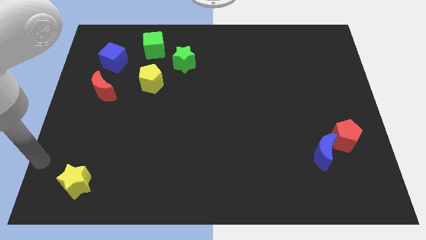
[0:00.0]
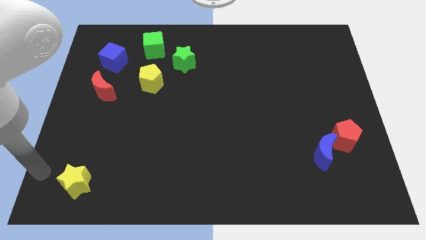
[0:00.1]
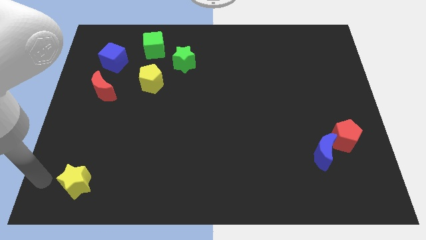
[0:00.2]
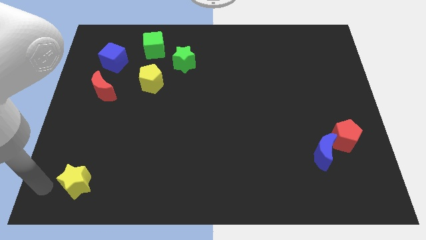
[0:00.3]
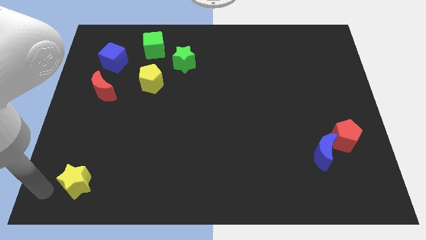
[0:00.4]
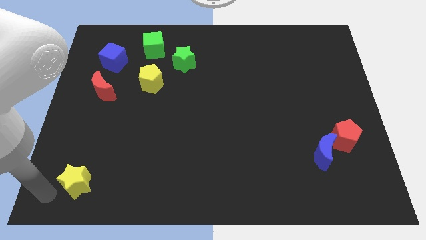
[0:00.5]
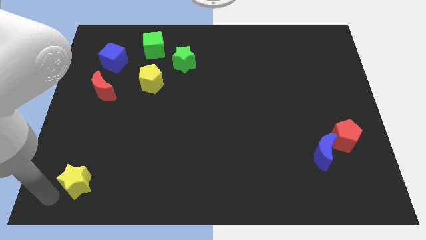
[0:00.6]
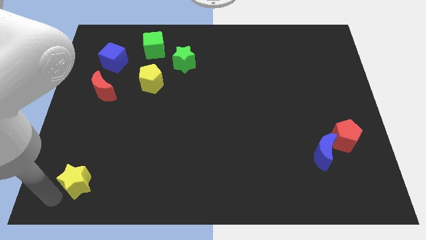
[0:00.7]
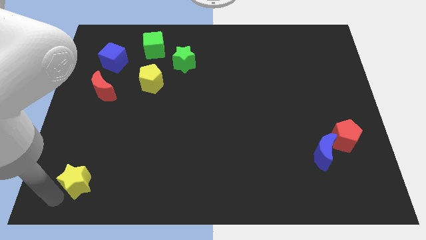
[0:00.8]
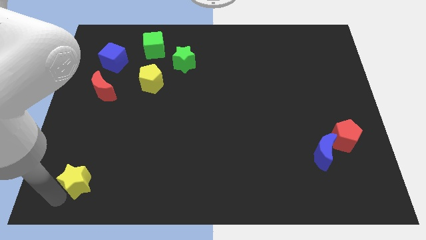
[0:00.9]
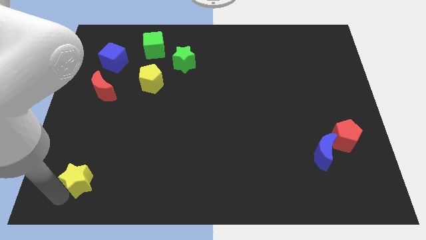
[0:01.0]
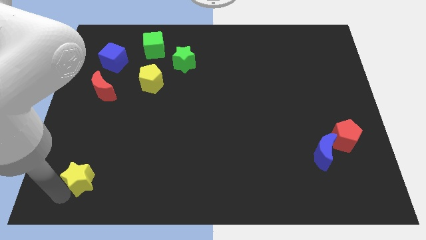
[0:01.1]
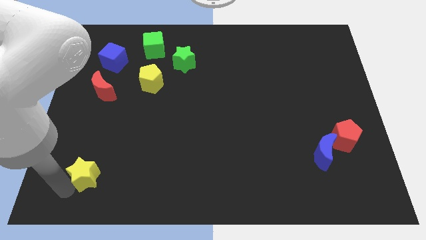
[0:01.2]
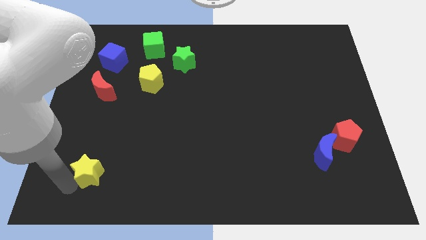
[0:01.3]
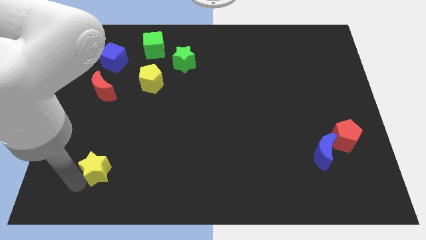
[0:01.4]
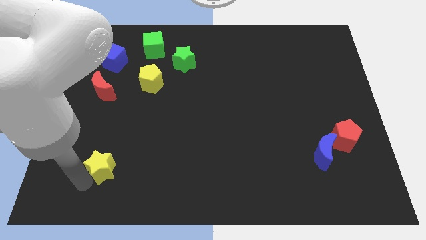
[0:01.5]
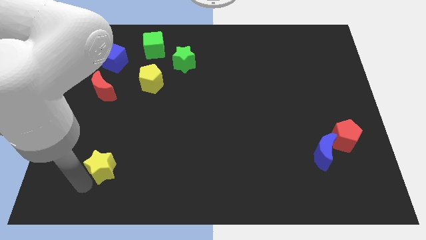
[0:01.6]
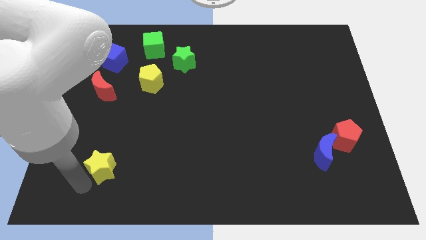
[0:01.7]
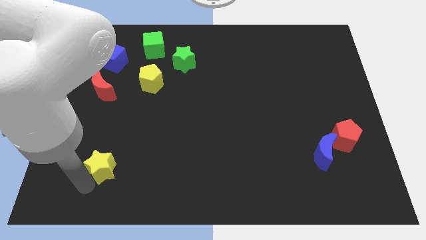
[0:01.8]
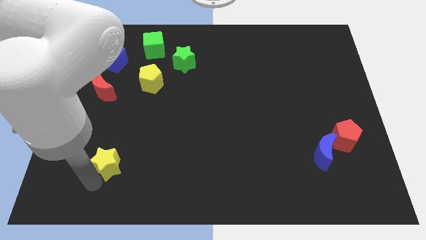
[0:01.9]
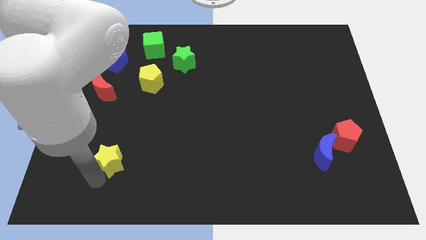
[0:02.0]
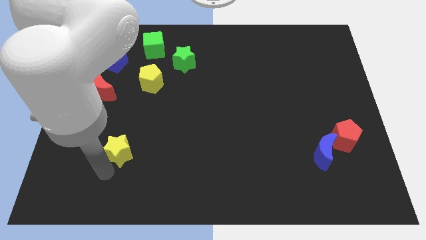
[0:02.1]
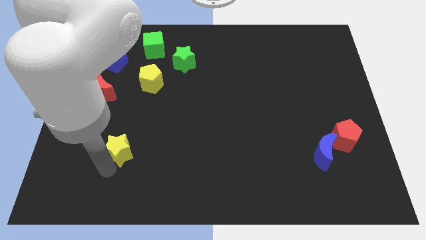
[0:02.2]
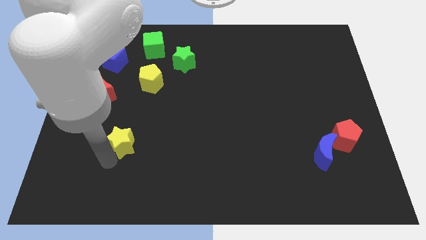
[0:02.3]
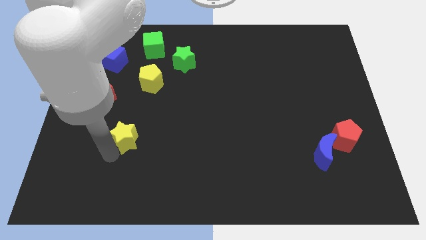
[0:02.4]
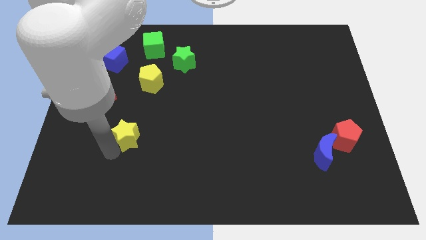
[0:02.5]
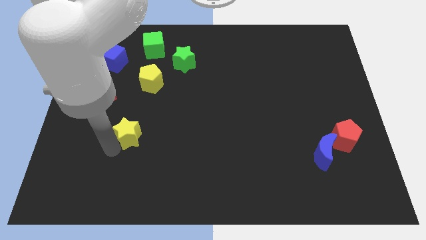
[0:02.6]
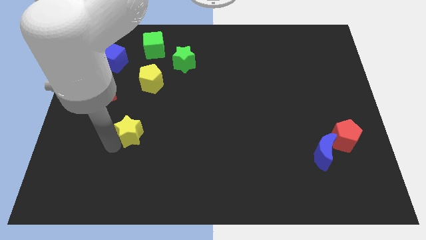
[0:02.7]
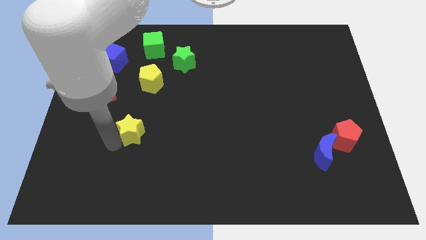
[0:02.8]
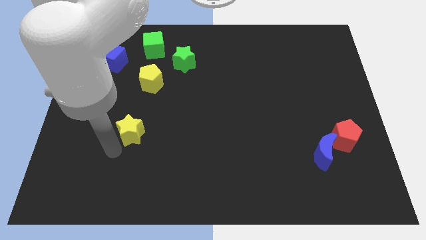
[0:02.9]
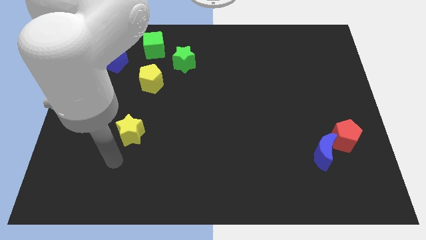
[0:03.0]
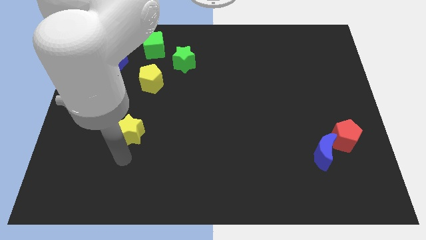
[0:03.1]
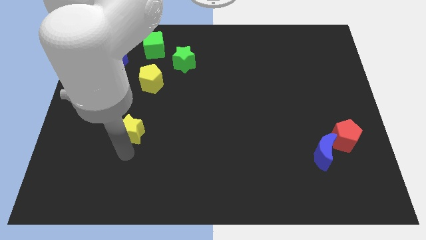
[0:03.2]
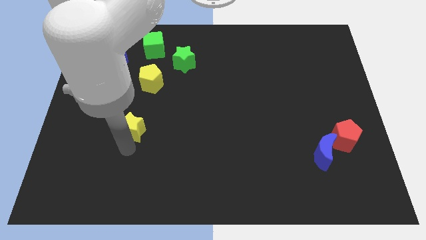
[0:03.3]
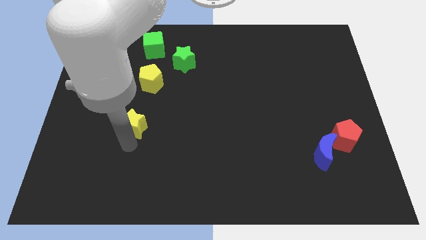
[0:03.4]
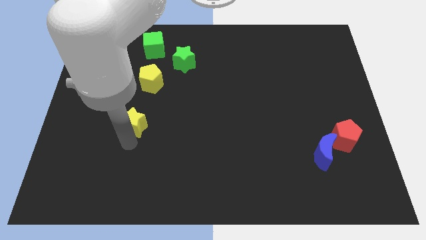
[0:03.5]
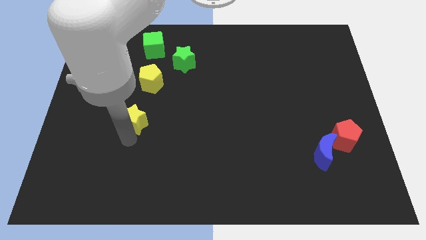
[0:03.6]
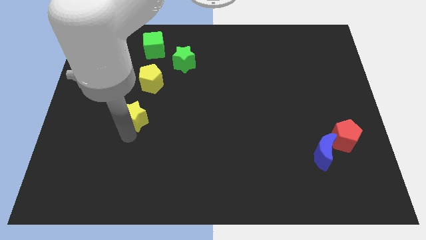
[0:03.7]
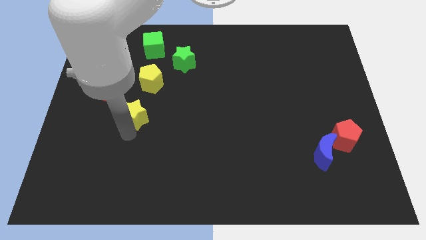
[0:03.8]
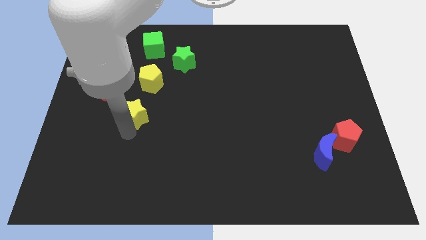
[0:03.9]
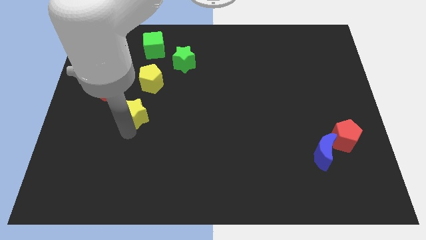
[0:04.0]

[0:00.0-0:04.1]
place yellow star diagonal to red moon

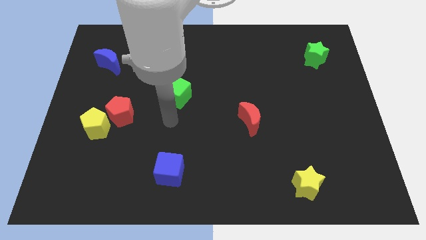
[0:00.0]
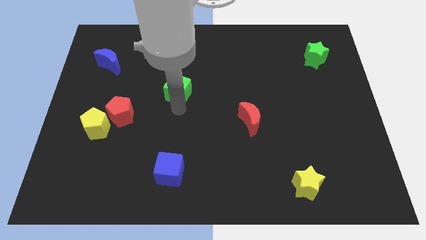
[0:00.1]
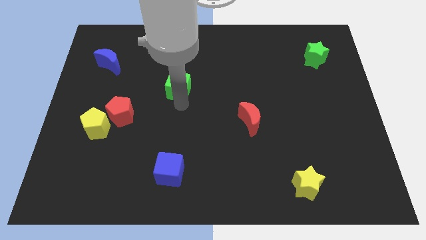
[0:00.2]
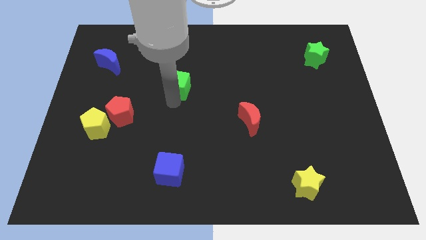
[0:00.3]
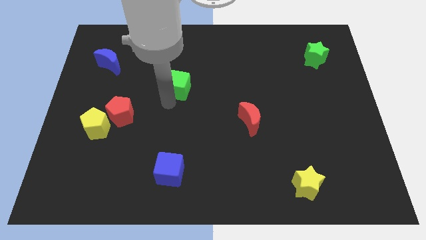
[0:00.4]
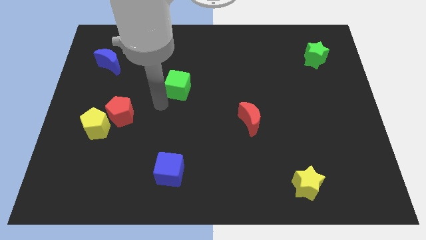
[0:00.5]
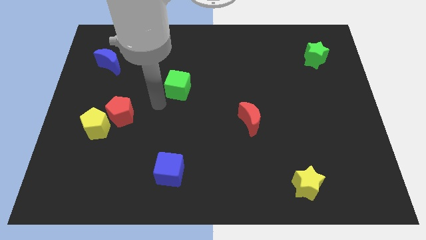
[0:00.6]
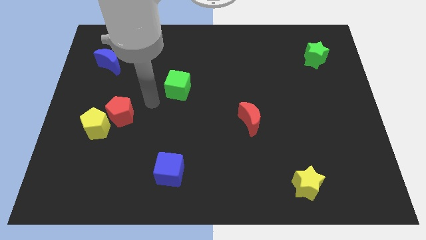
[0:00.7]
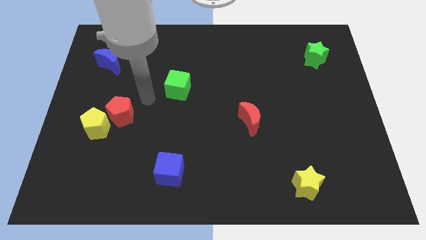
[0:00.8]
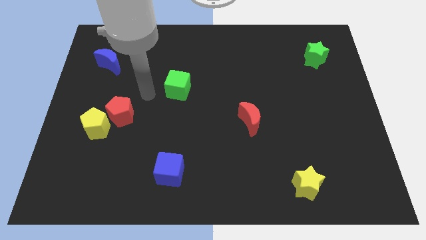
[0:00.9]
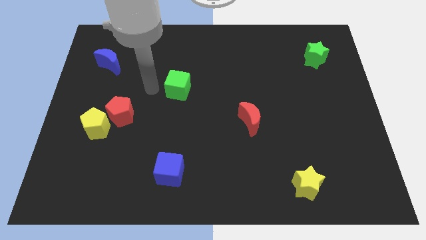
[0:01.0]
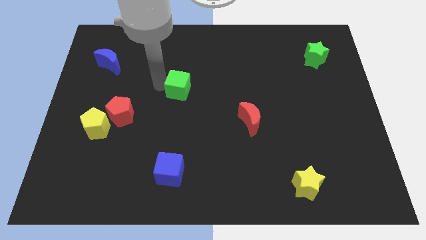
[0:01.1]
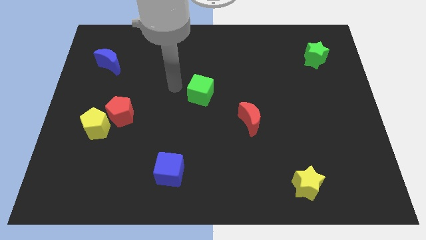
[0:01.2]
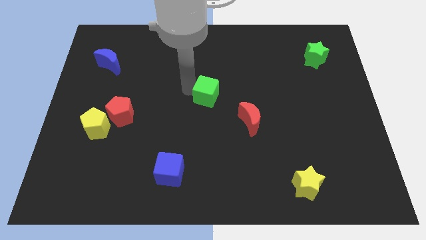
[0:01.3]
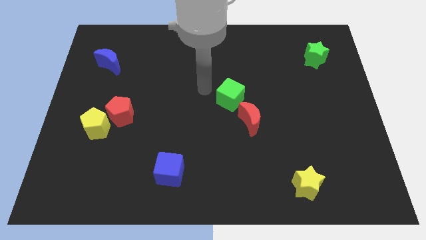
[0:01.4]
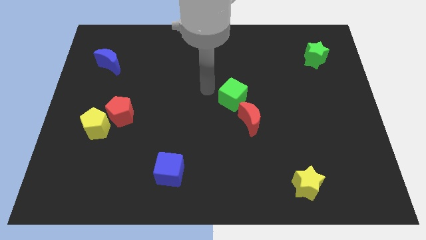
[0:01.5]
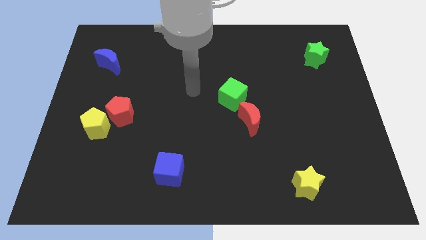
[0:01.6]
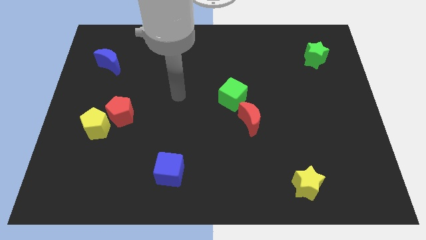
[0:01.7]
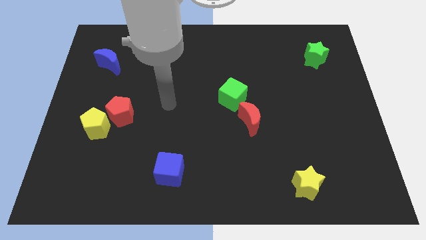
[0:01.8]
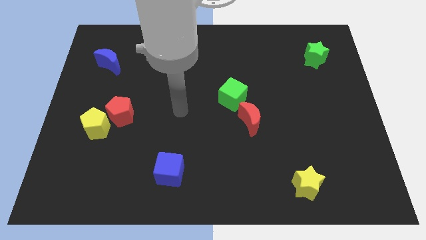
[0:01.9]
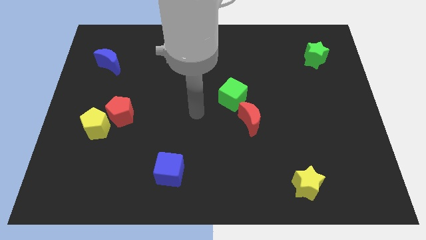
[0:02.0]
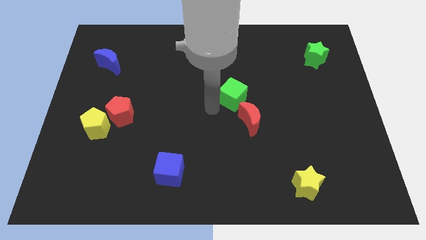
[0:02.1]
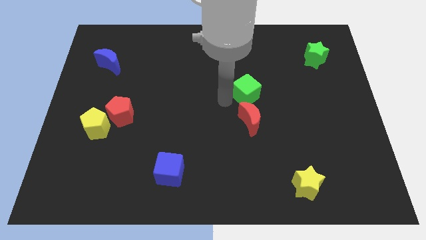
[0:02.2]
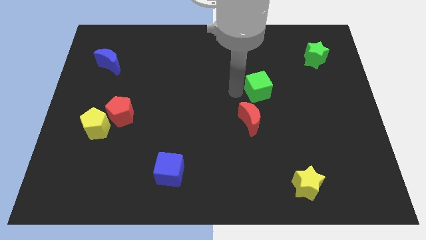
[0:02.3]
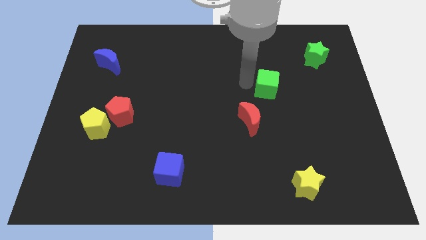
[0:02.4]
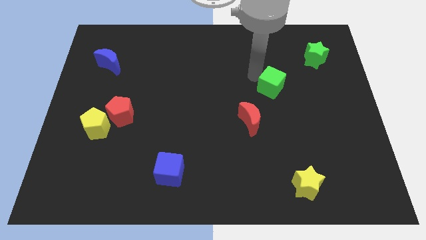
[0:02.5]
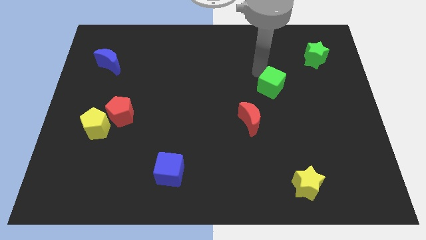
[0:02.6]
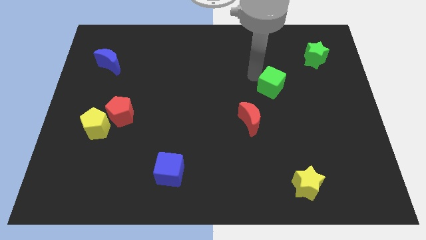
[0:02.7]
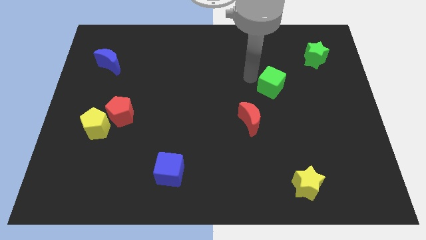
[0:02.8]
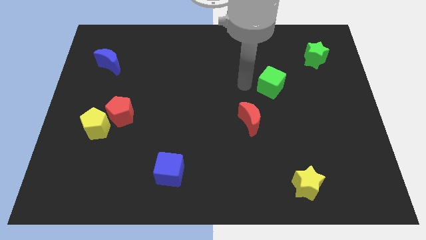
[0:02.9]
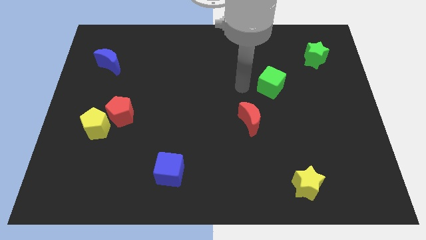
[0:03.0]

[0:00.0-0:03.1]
move the green cube to the right

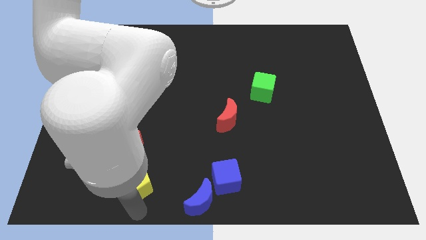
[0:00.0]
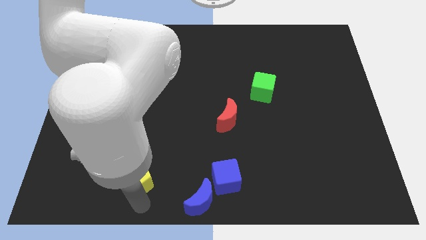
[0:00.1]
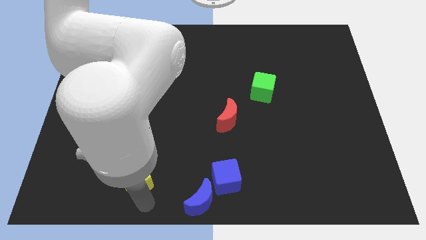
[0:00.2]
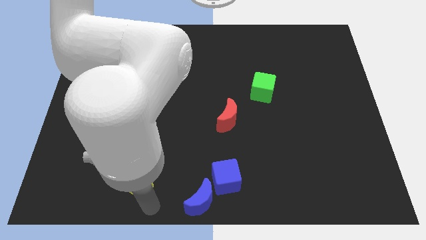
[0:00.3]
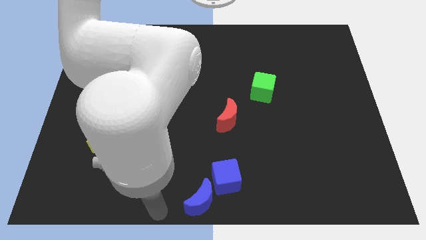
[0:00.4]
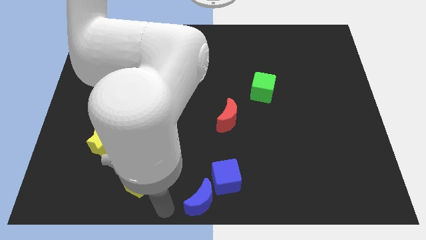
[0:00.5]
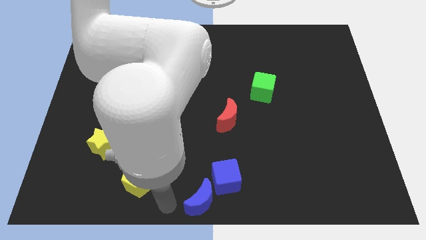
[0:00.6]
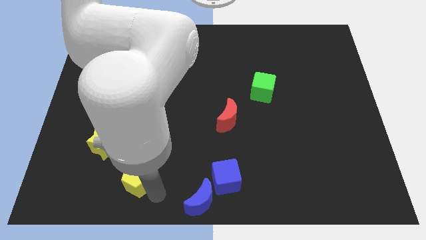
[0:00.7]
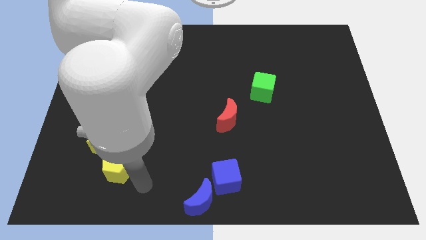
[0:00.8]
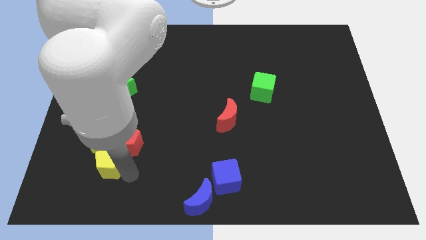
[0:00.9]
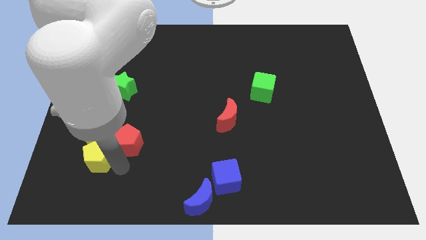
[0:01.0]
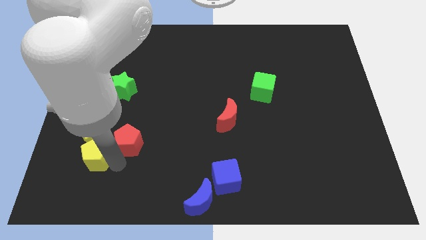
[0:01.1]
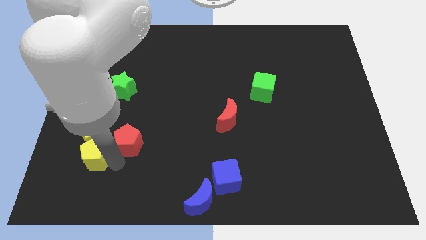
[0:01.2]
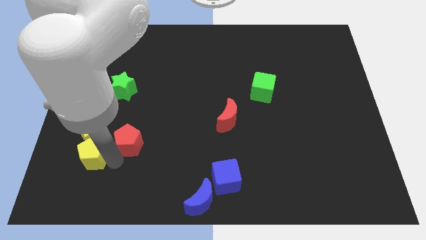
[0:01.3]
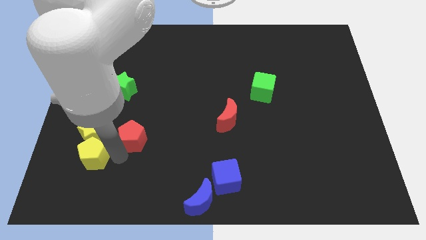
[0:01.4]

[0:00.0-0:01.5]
place the yellow pentagon below the yellow star

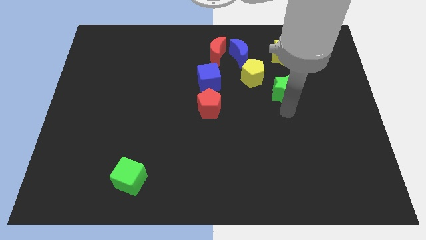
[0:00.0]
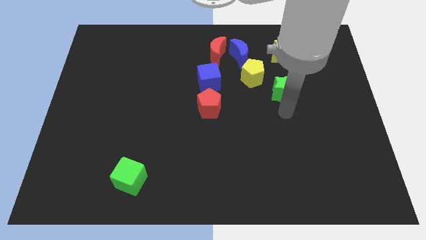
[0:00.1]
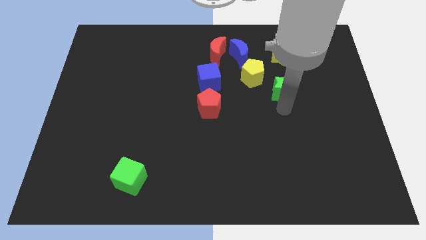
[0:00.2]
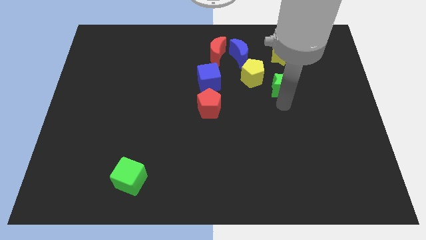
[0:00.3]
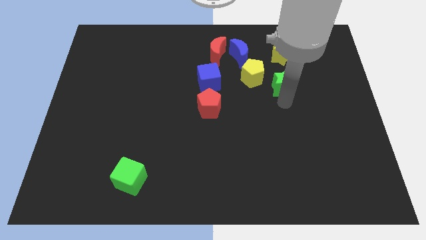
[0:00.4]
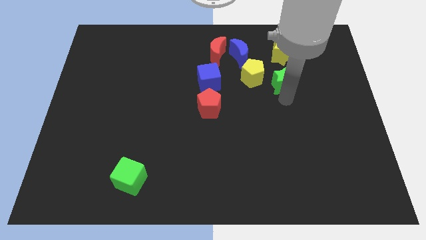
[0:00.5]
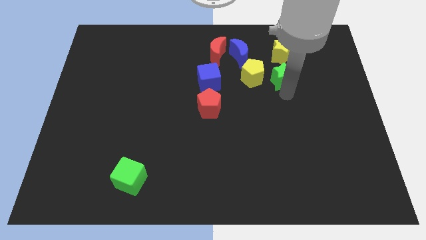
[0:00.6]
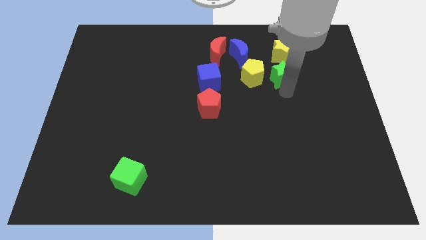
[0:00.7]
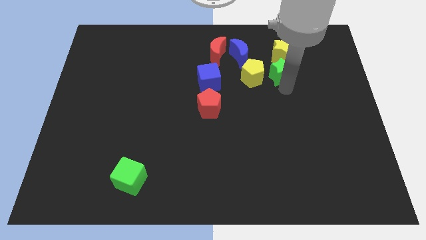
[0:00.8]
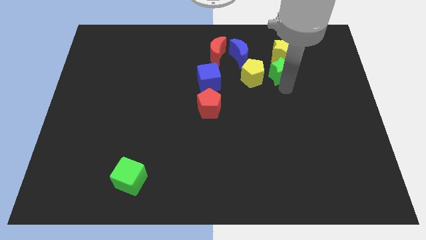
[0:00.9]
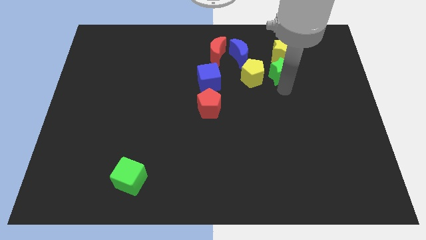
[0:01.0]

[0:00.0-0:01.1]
place the green star below the yellow star
